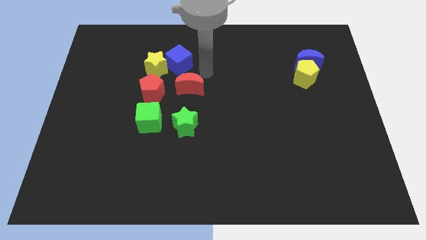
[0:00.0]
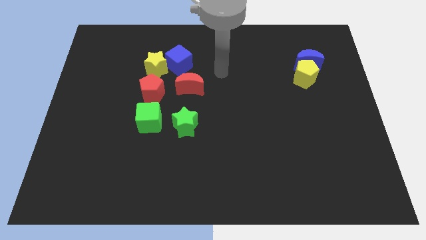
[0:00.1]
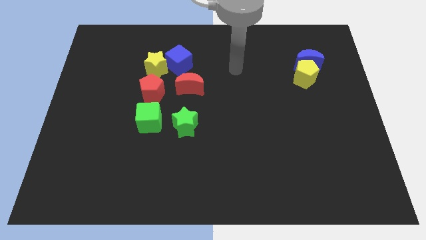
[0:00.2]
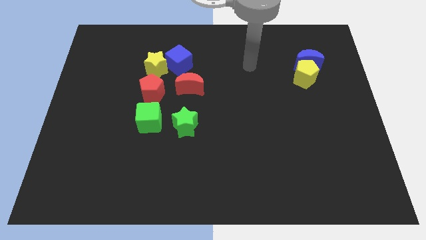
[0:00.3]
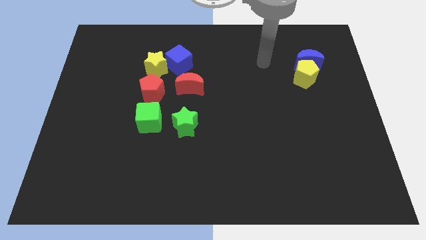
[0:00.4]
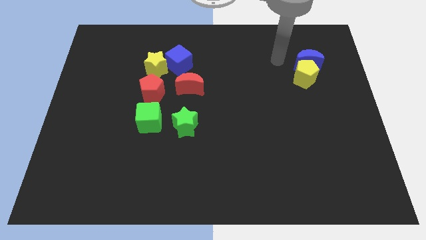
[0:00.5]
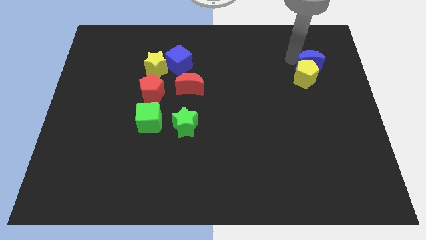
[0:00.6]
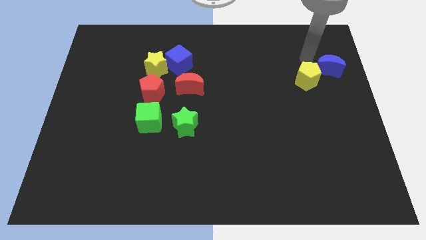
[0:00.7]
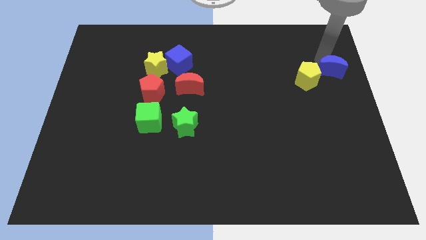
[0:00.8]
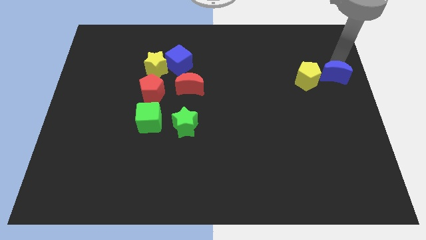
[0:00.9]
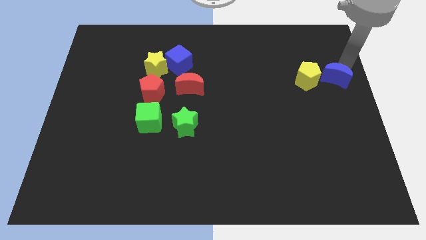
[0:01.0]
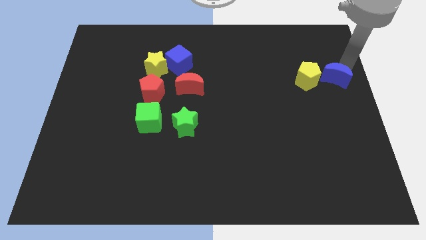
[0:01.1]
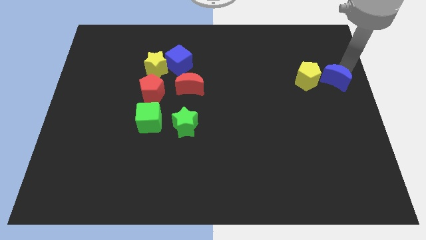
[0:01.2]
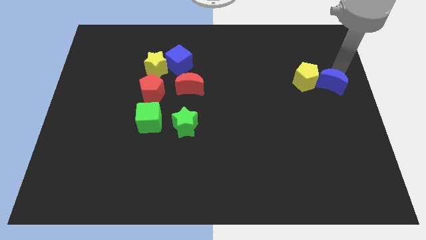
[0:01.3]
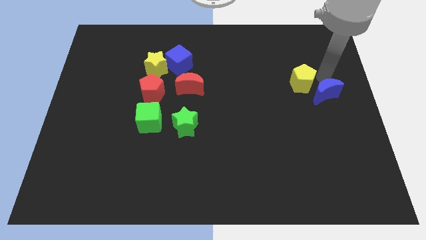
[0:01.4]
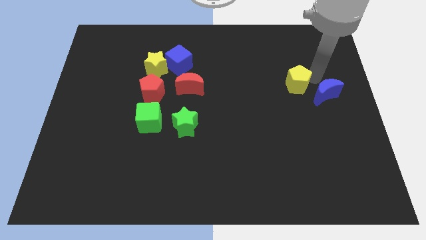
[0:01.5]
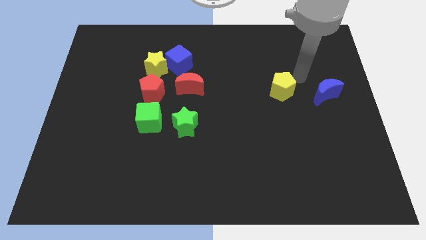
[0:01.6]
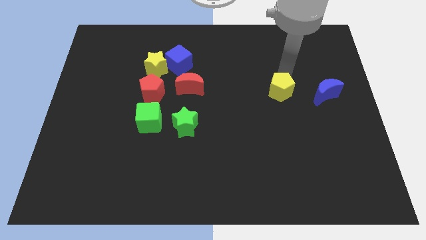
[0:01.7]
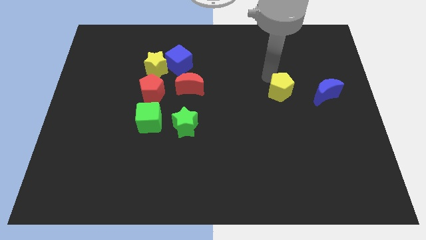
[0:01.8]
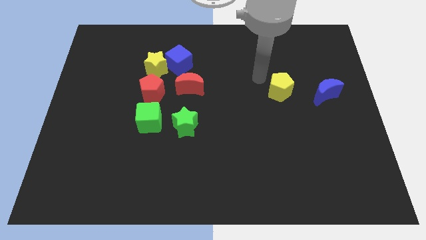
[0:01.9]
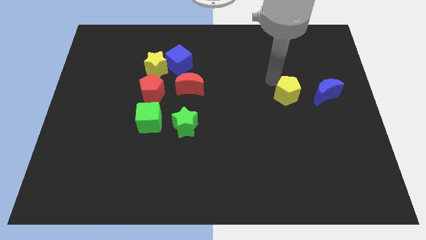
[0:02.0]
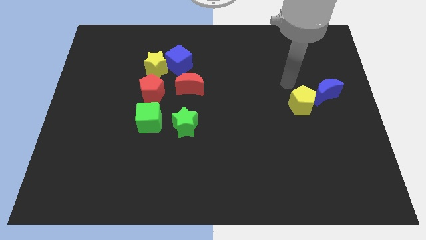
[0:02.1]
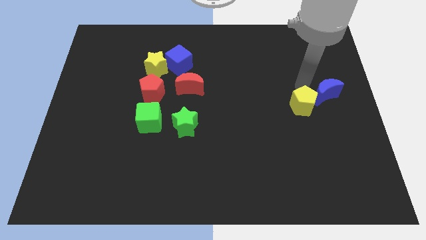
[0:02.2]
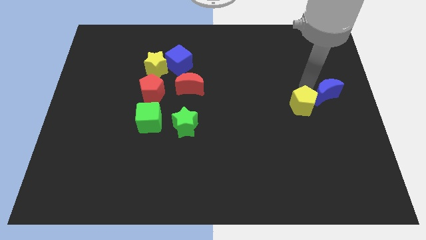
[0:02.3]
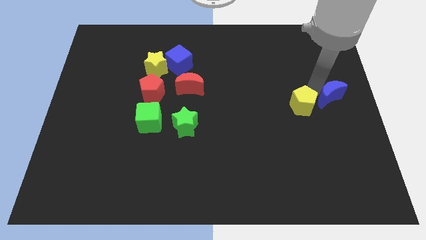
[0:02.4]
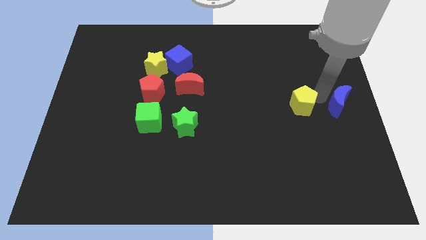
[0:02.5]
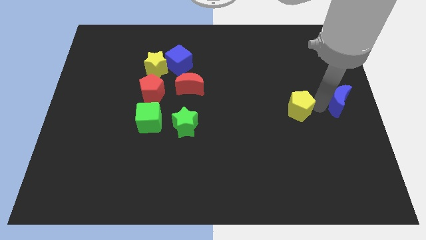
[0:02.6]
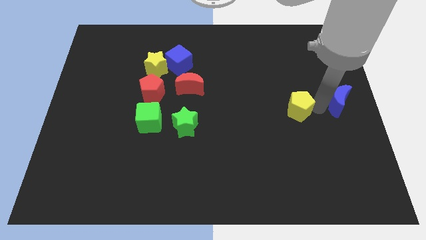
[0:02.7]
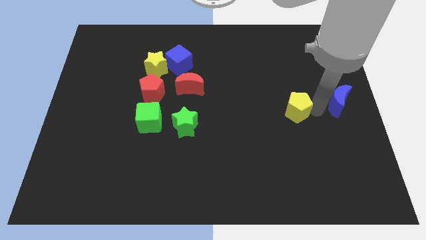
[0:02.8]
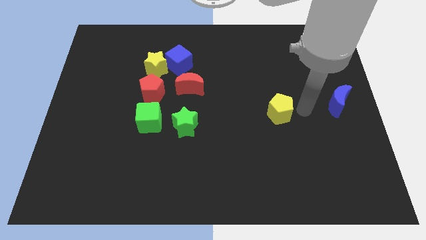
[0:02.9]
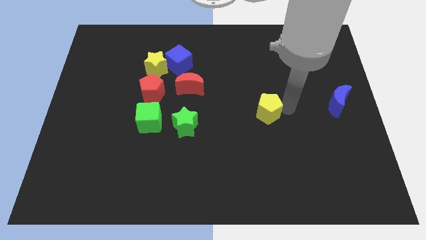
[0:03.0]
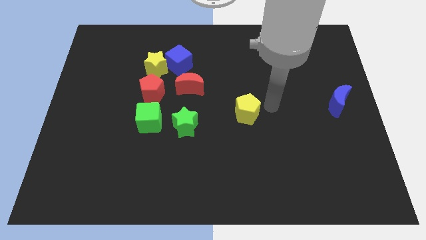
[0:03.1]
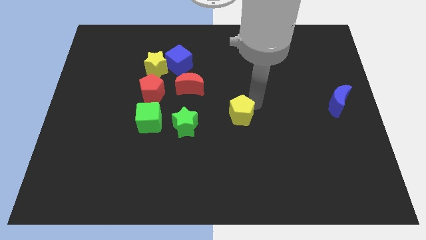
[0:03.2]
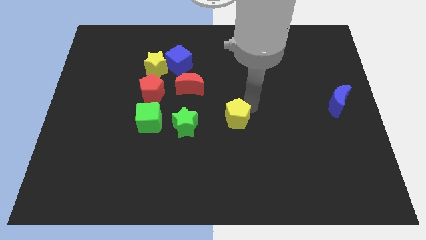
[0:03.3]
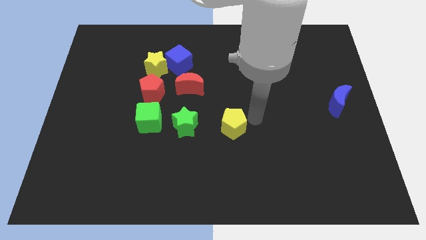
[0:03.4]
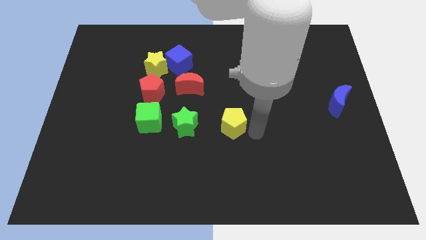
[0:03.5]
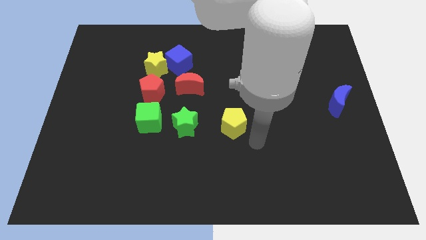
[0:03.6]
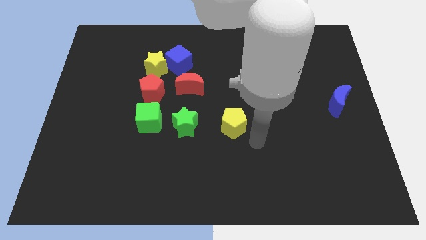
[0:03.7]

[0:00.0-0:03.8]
move the yellow pentagon to the center of the board

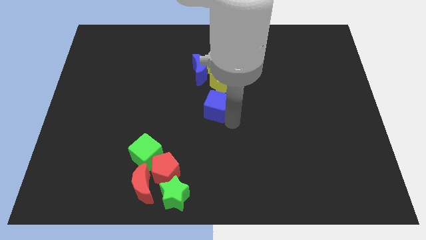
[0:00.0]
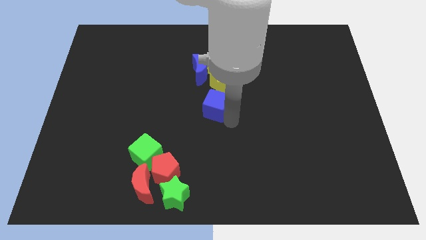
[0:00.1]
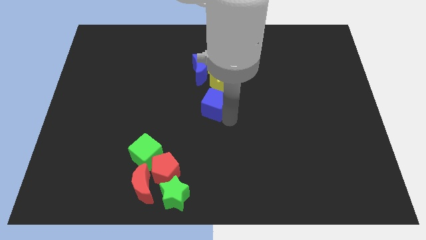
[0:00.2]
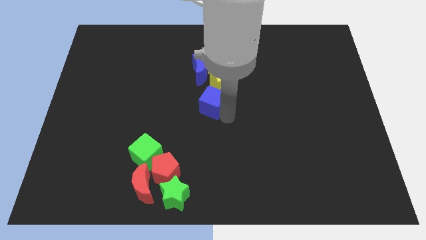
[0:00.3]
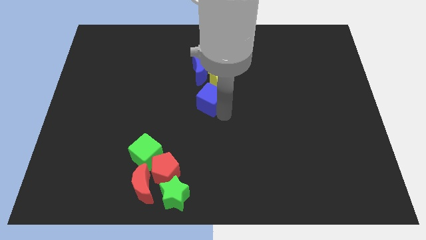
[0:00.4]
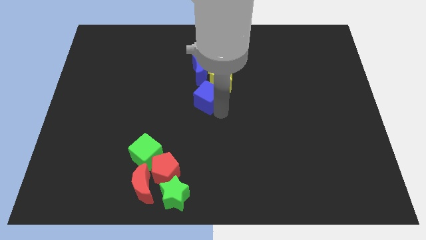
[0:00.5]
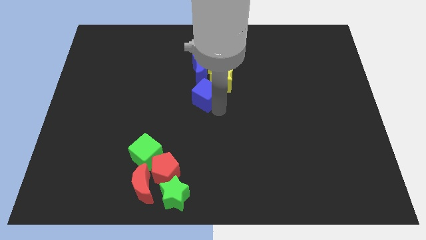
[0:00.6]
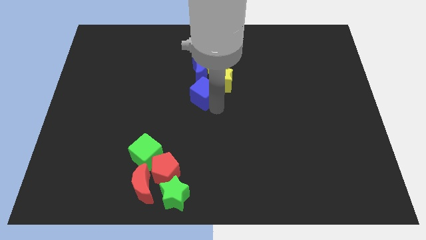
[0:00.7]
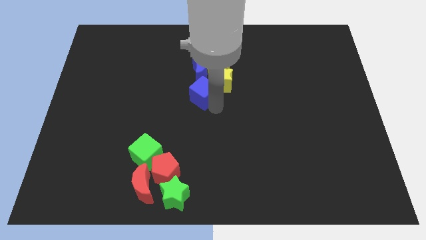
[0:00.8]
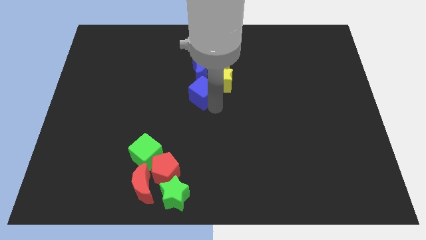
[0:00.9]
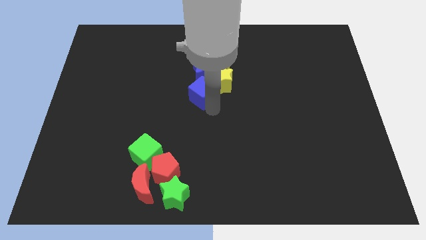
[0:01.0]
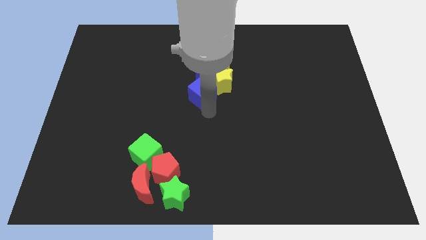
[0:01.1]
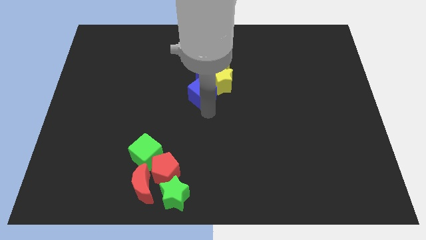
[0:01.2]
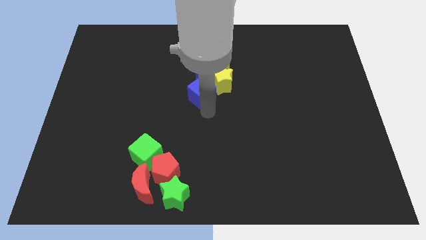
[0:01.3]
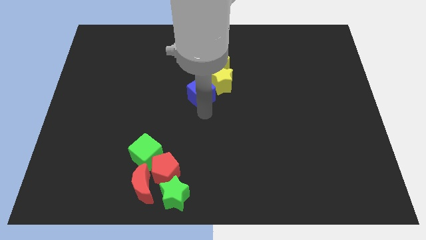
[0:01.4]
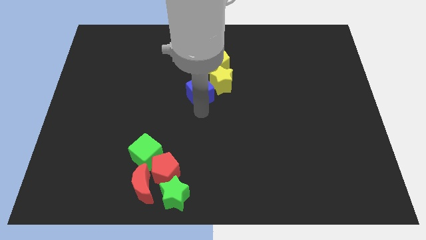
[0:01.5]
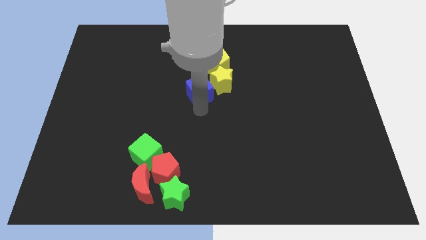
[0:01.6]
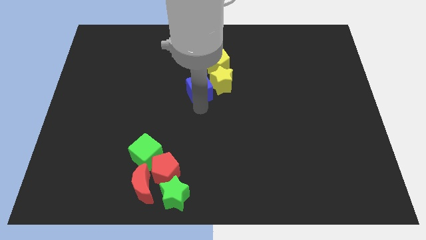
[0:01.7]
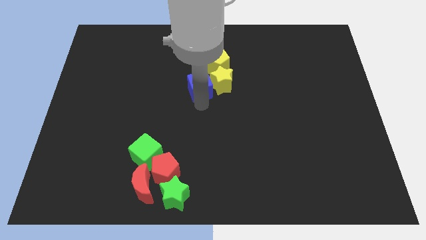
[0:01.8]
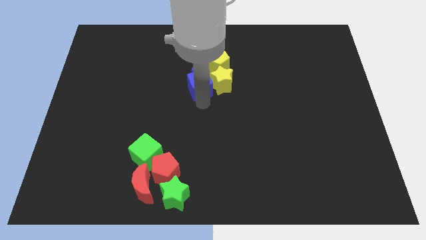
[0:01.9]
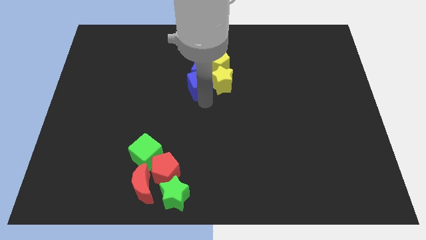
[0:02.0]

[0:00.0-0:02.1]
add the blue cube to the group of blocks

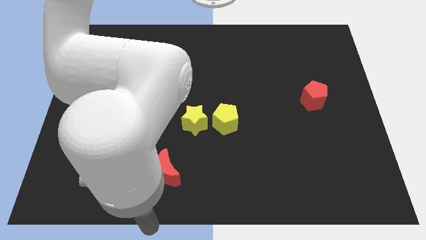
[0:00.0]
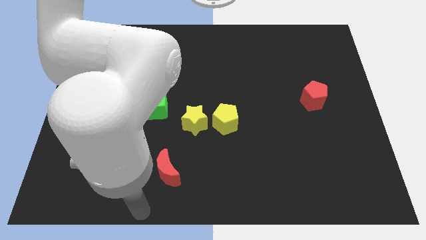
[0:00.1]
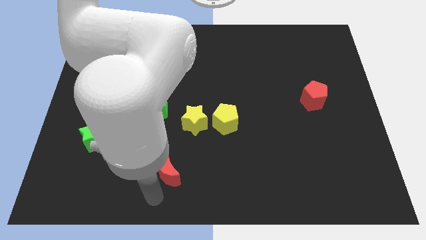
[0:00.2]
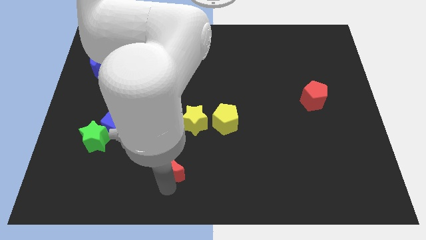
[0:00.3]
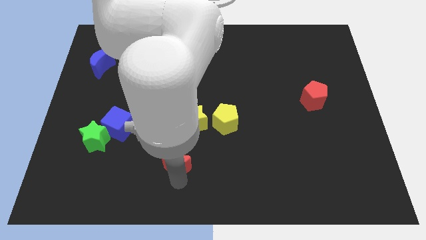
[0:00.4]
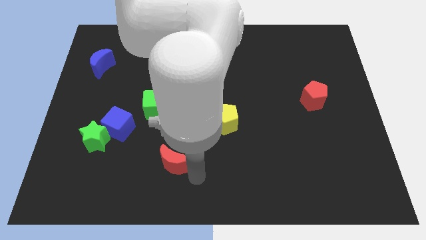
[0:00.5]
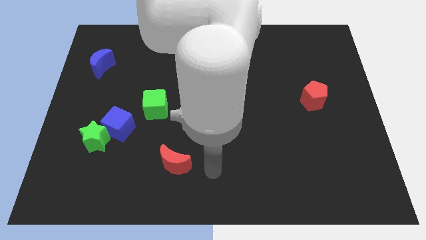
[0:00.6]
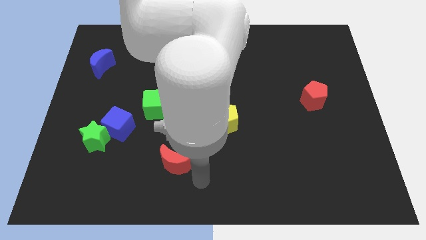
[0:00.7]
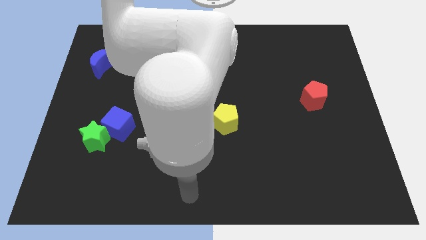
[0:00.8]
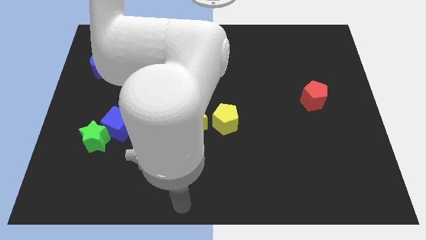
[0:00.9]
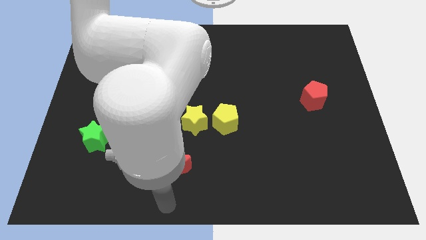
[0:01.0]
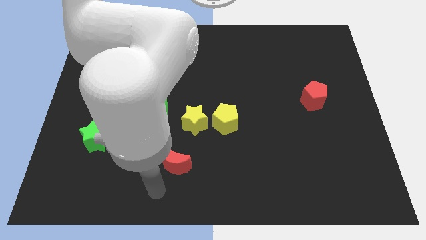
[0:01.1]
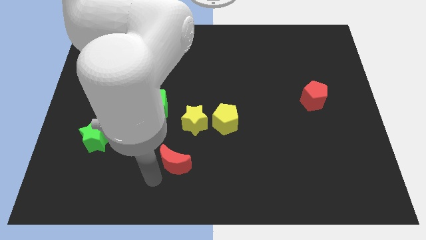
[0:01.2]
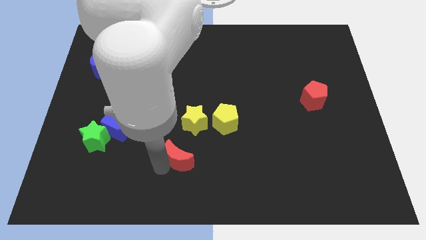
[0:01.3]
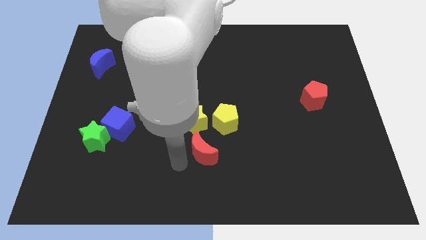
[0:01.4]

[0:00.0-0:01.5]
push red crescent below yellow star

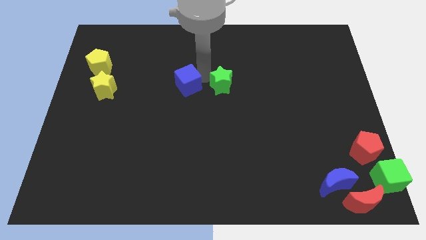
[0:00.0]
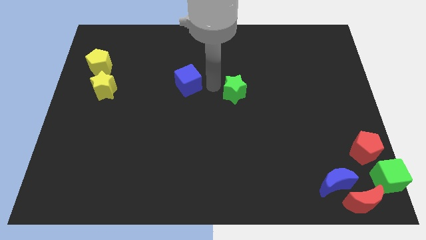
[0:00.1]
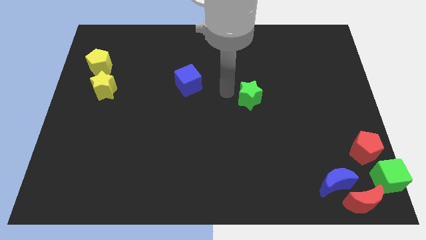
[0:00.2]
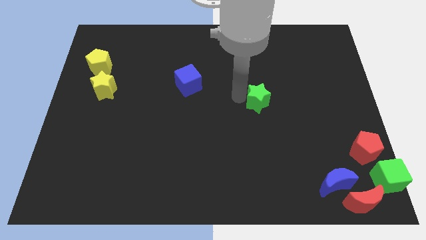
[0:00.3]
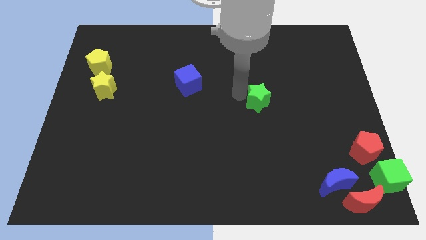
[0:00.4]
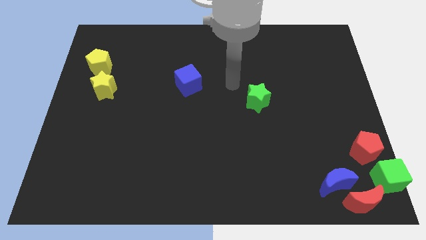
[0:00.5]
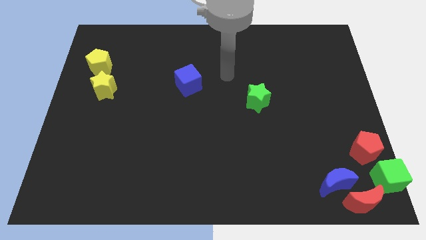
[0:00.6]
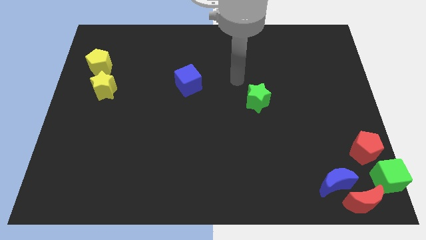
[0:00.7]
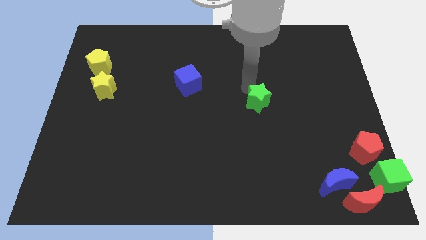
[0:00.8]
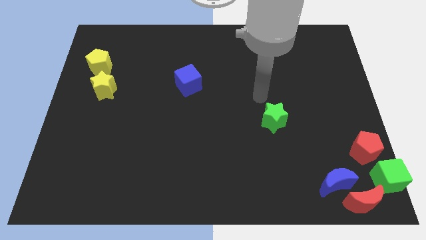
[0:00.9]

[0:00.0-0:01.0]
push the green green star slightly downwards of the board

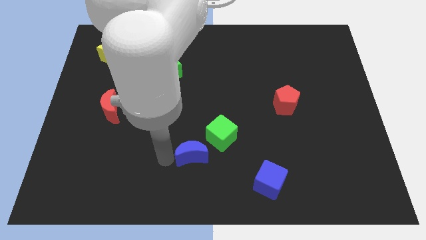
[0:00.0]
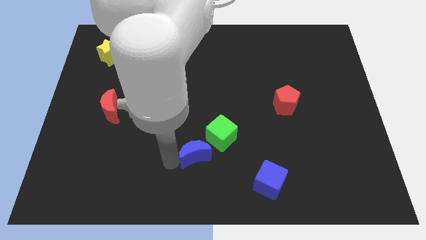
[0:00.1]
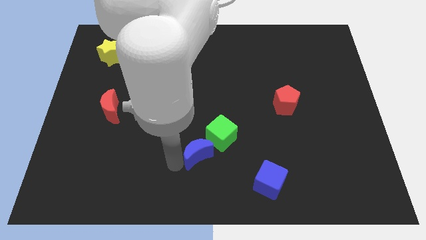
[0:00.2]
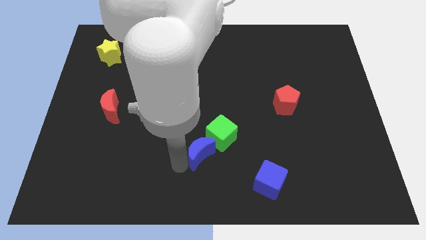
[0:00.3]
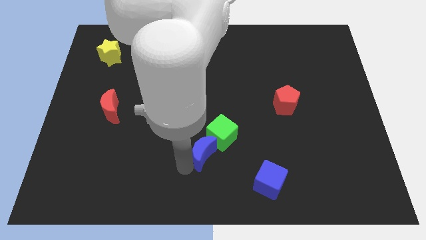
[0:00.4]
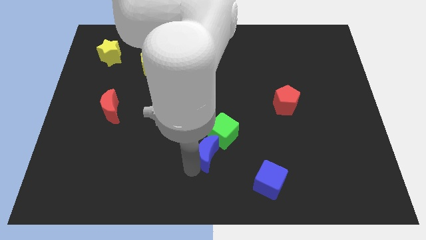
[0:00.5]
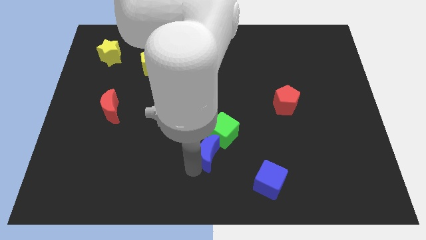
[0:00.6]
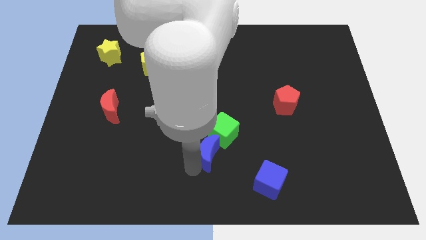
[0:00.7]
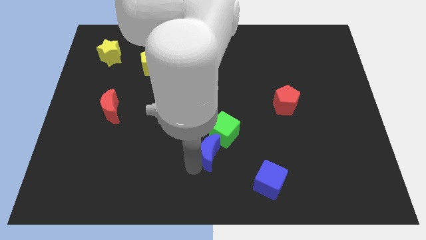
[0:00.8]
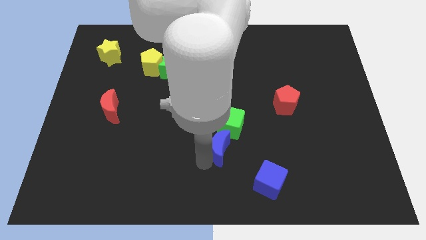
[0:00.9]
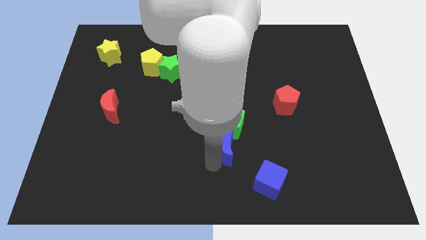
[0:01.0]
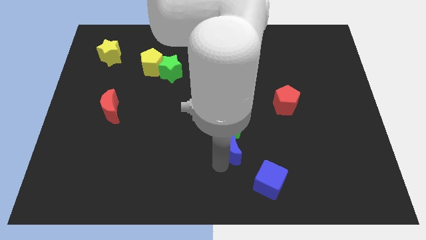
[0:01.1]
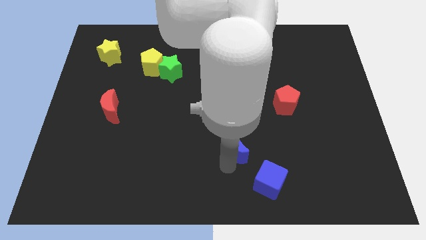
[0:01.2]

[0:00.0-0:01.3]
place the blue moon at the bottom of the green cube
